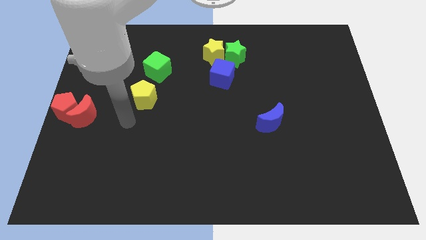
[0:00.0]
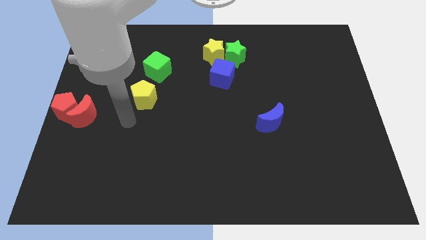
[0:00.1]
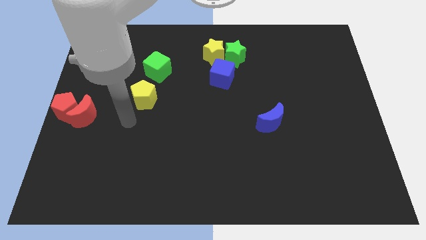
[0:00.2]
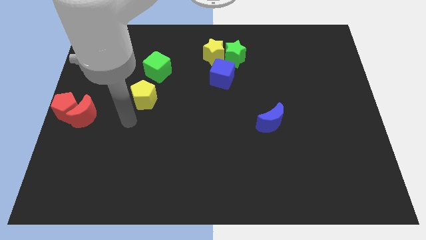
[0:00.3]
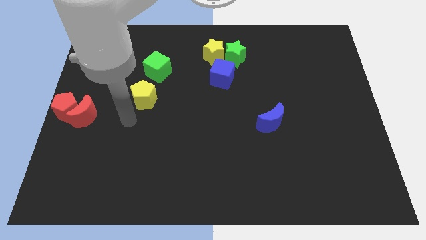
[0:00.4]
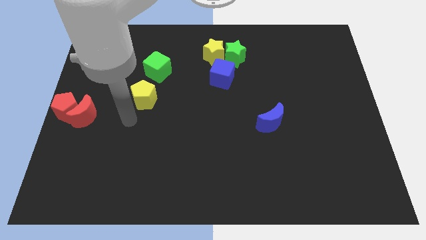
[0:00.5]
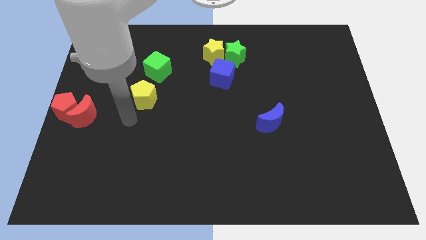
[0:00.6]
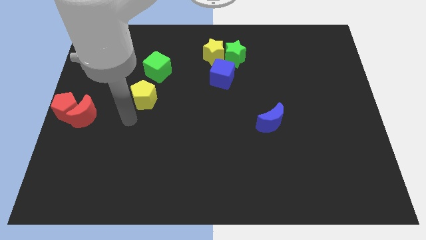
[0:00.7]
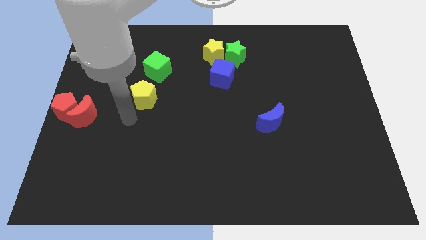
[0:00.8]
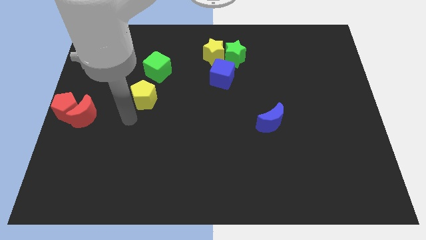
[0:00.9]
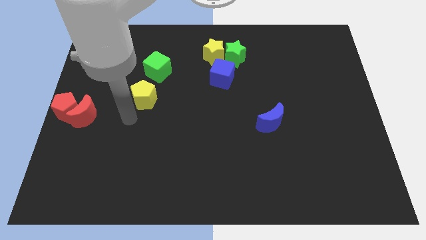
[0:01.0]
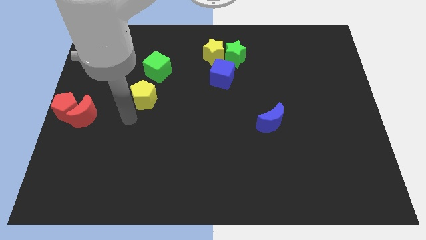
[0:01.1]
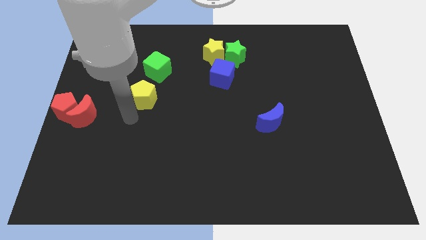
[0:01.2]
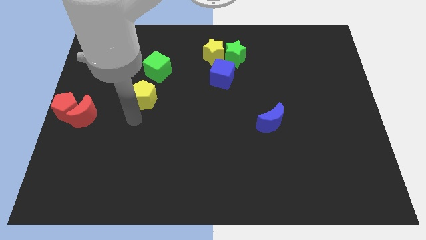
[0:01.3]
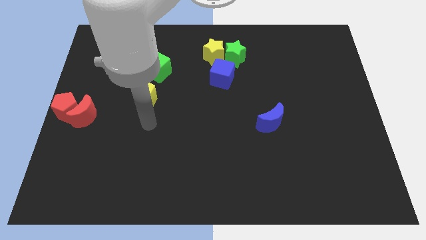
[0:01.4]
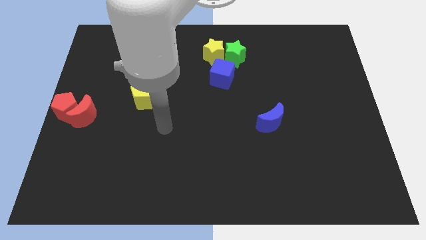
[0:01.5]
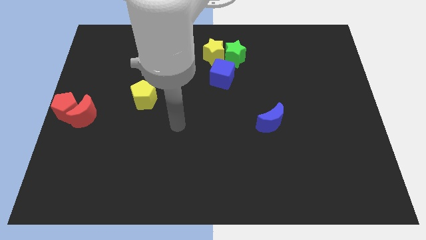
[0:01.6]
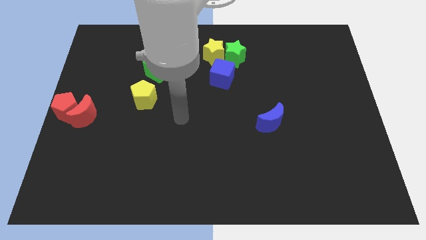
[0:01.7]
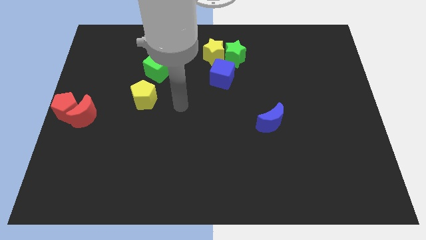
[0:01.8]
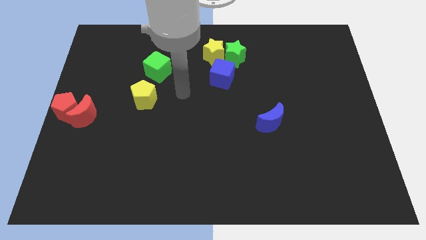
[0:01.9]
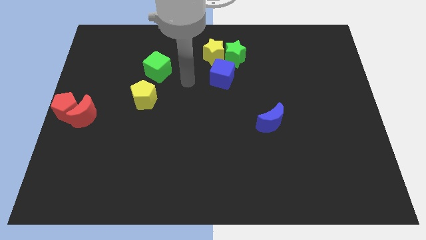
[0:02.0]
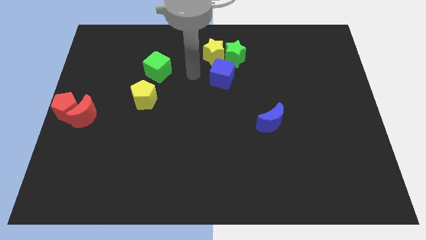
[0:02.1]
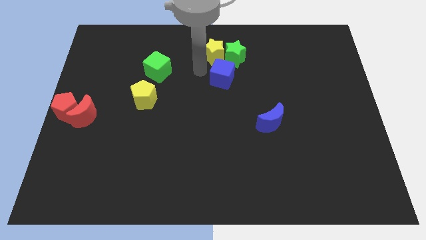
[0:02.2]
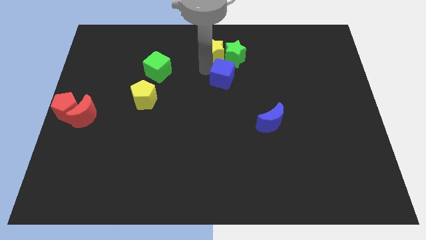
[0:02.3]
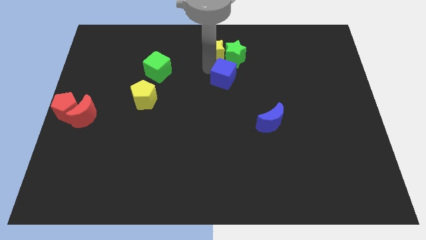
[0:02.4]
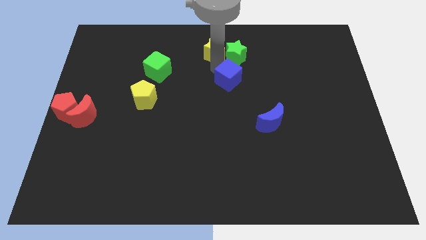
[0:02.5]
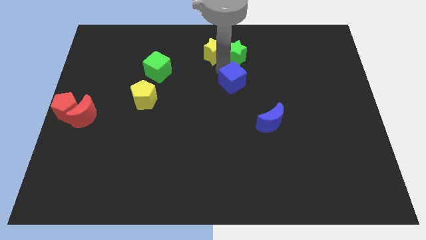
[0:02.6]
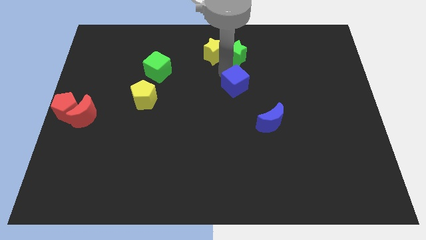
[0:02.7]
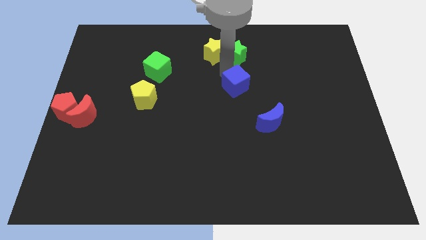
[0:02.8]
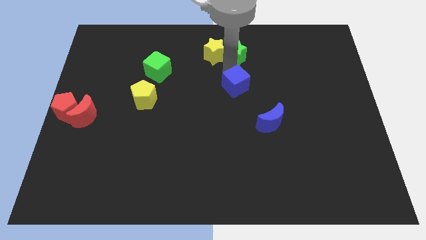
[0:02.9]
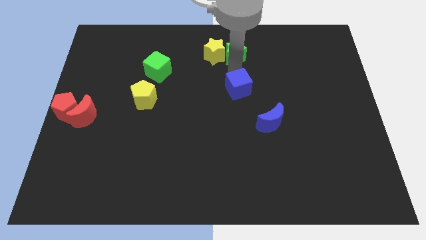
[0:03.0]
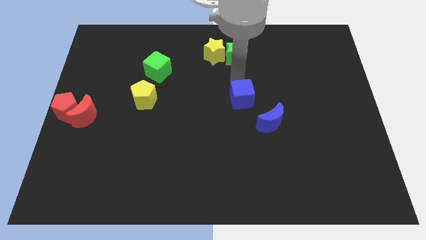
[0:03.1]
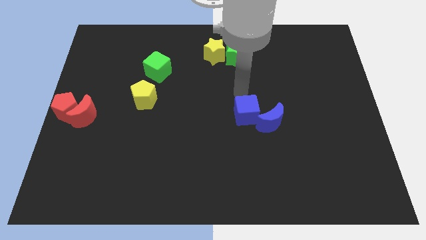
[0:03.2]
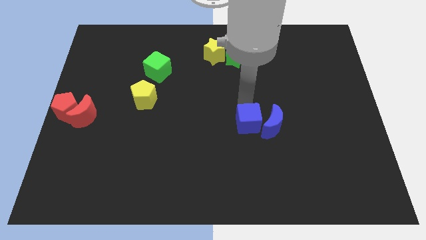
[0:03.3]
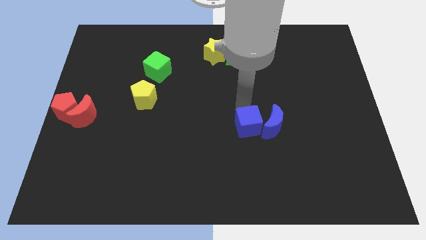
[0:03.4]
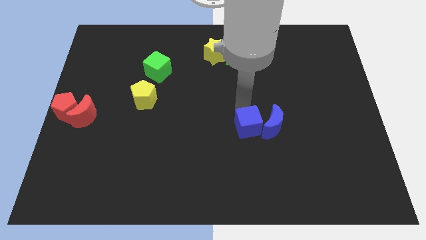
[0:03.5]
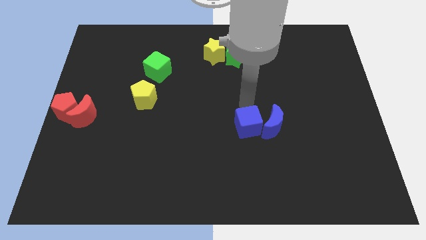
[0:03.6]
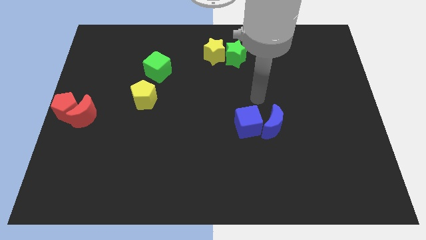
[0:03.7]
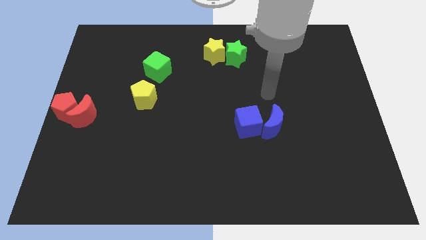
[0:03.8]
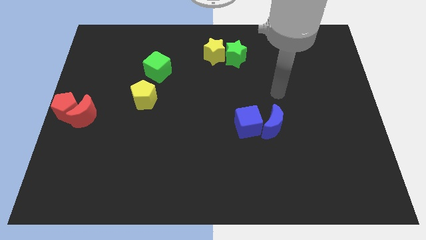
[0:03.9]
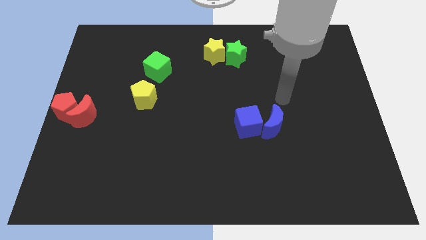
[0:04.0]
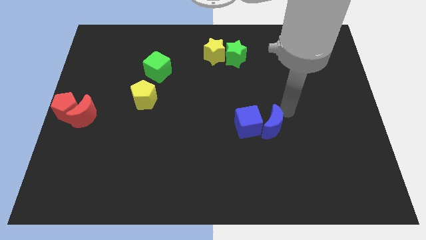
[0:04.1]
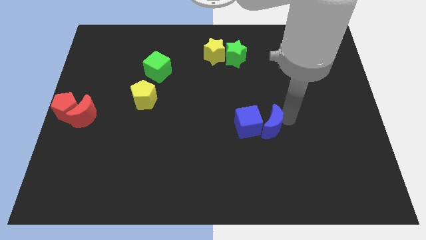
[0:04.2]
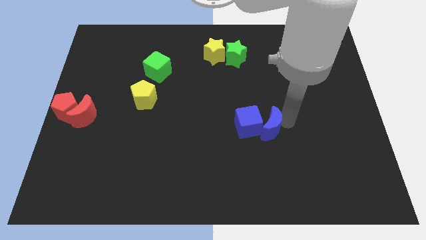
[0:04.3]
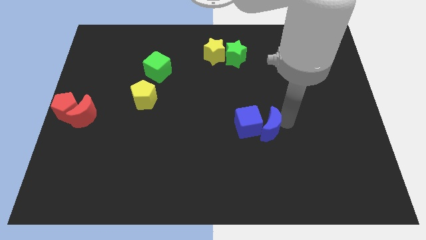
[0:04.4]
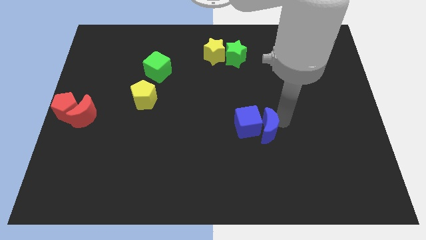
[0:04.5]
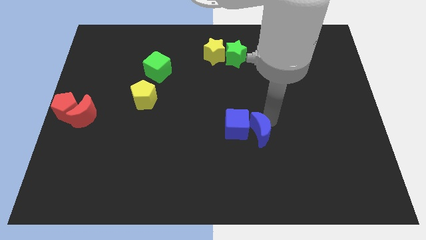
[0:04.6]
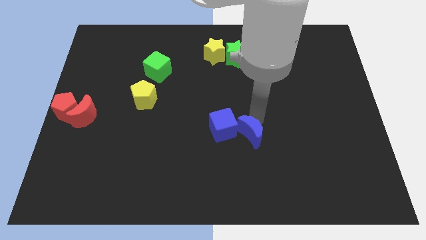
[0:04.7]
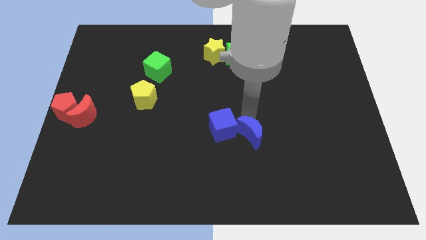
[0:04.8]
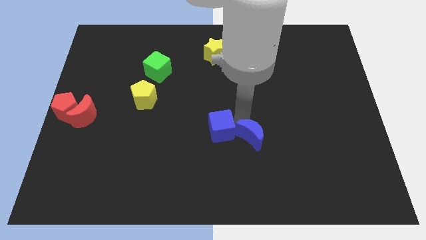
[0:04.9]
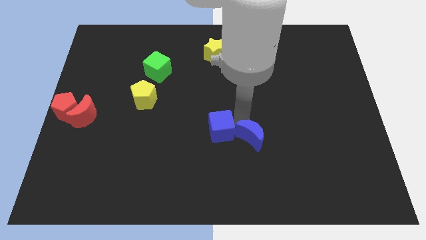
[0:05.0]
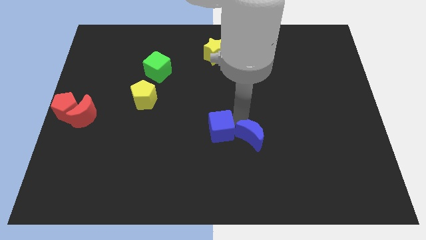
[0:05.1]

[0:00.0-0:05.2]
place a blue cube to the center of the board

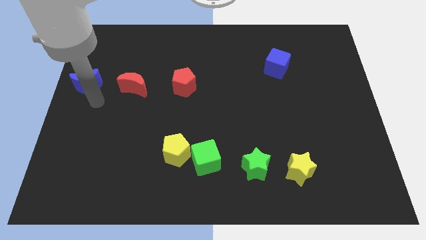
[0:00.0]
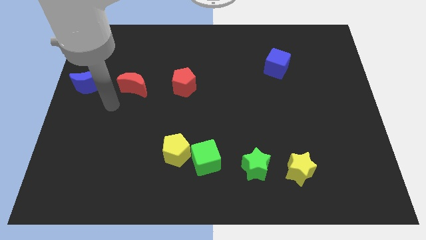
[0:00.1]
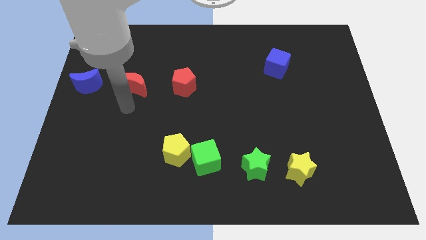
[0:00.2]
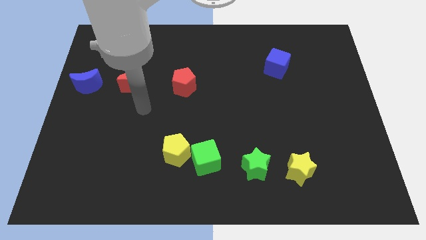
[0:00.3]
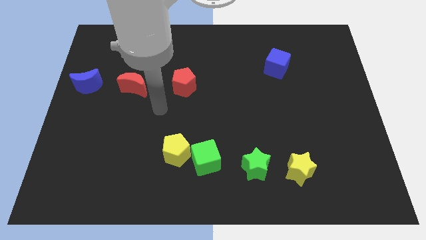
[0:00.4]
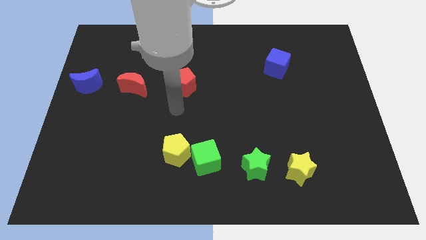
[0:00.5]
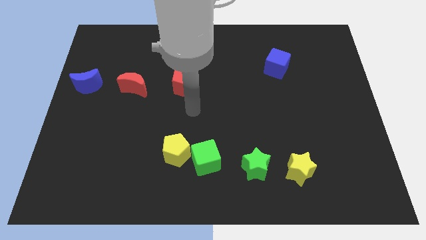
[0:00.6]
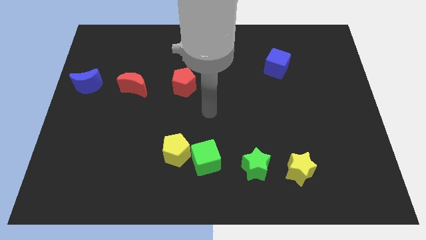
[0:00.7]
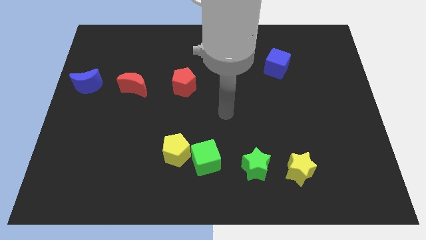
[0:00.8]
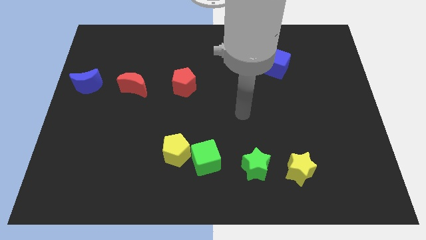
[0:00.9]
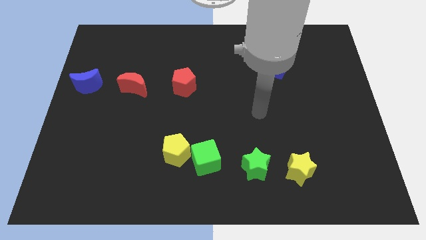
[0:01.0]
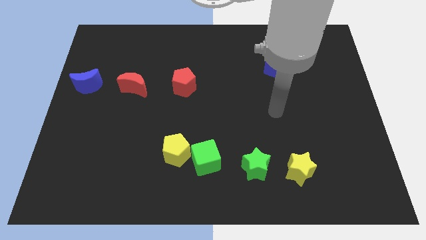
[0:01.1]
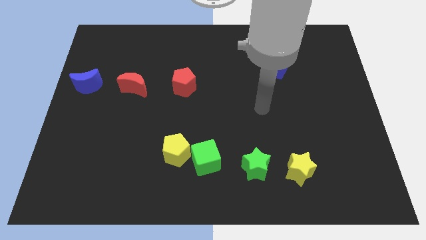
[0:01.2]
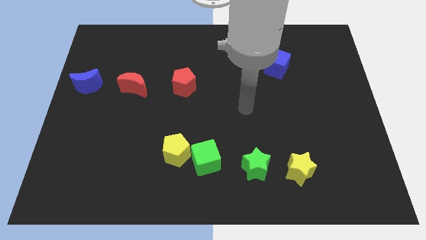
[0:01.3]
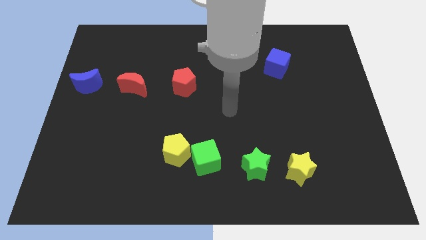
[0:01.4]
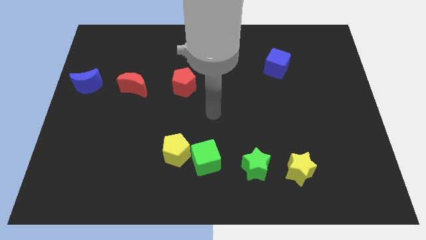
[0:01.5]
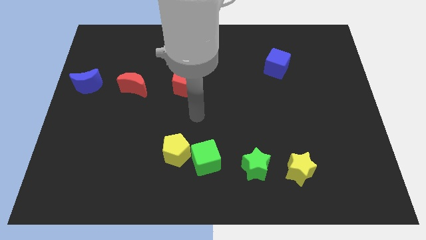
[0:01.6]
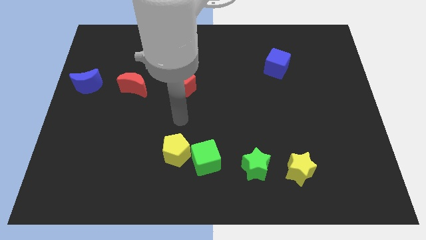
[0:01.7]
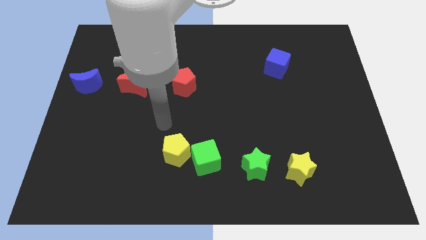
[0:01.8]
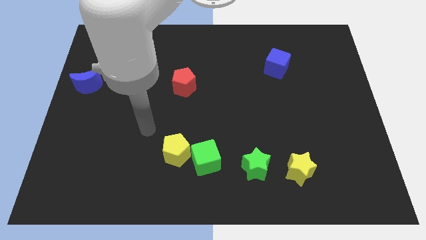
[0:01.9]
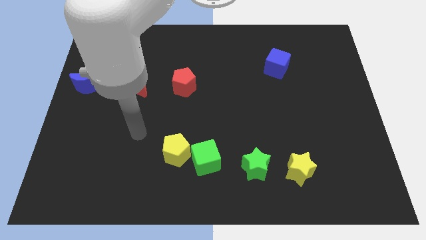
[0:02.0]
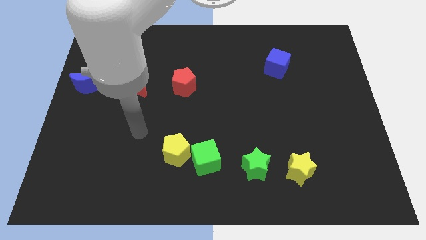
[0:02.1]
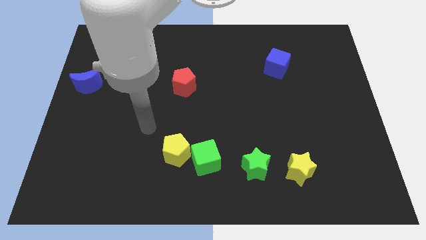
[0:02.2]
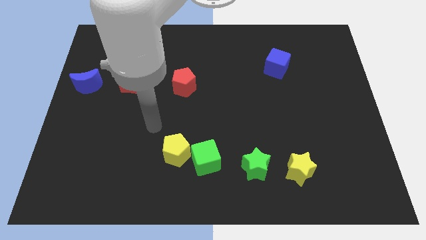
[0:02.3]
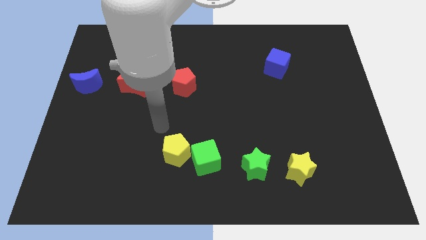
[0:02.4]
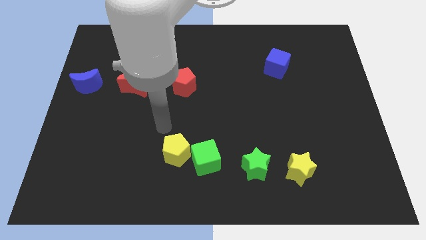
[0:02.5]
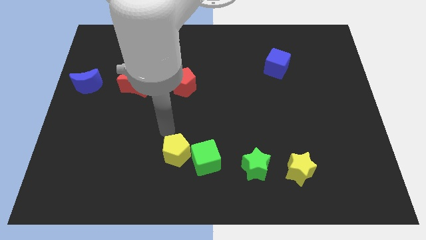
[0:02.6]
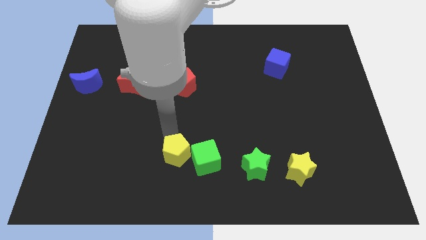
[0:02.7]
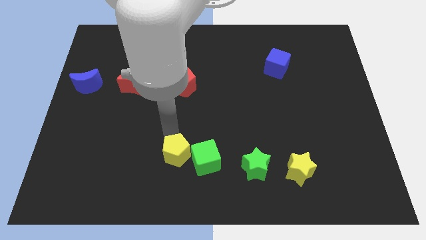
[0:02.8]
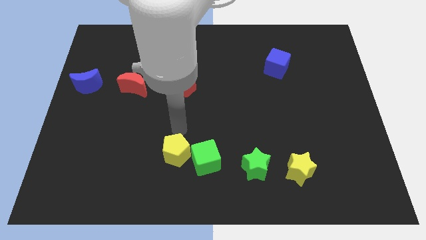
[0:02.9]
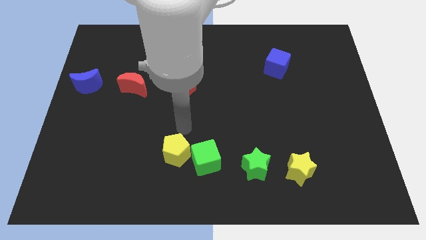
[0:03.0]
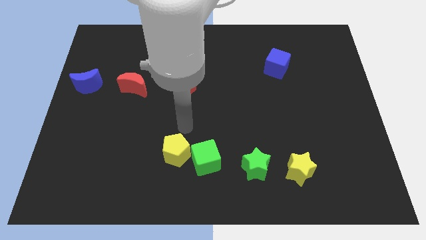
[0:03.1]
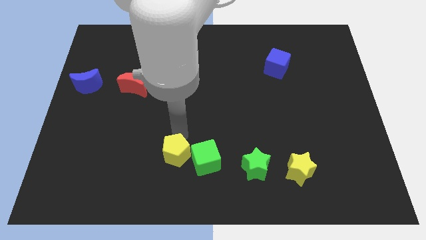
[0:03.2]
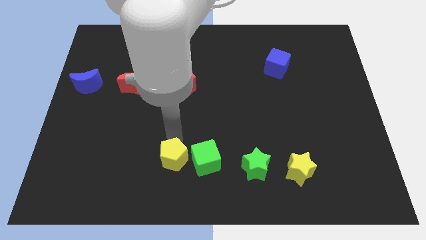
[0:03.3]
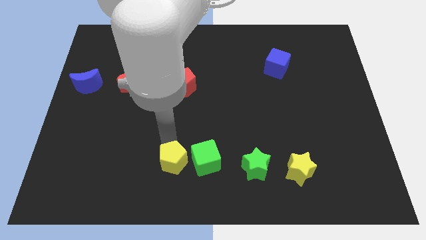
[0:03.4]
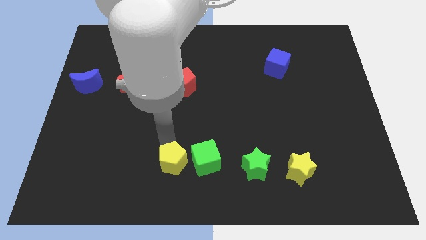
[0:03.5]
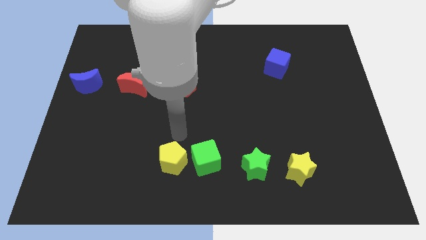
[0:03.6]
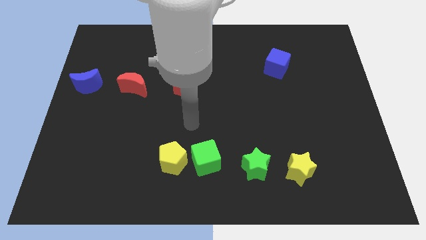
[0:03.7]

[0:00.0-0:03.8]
slightly move the yellow pentagon to the bottom of the board
